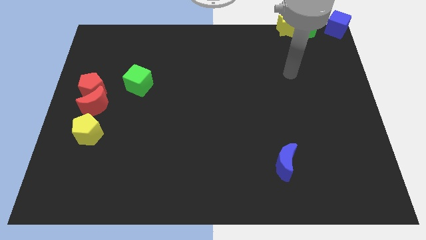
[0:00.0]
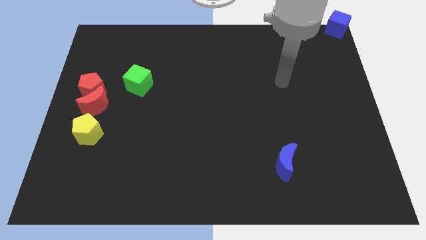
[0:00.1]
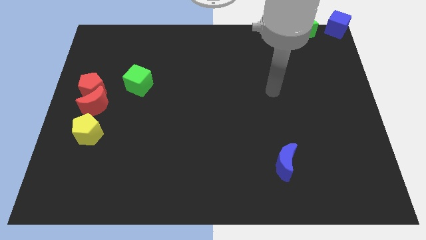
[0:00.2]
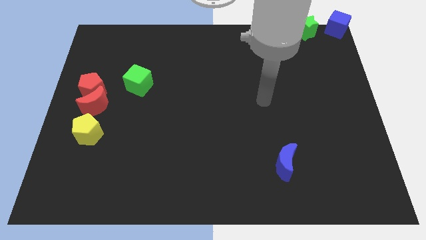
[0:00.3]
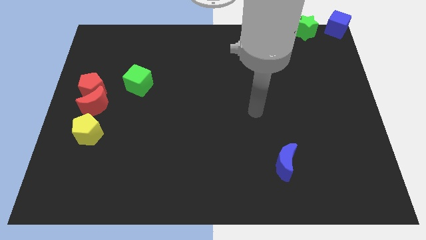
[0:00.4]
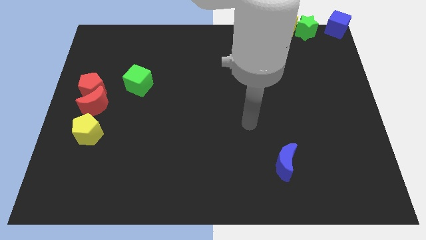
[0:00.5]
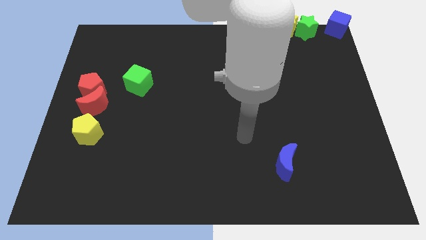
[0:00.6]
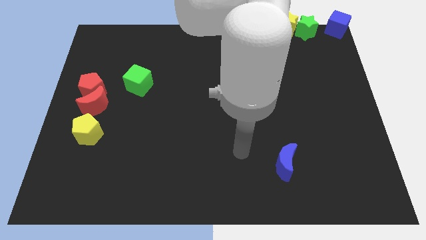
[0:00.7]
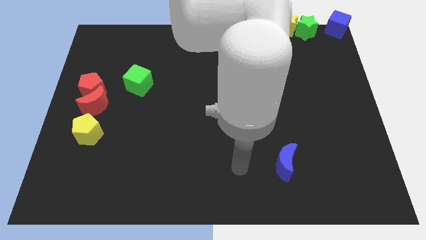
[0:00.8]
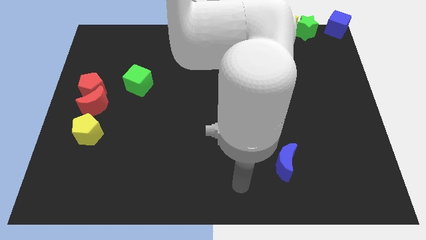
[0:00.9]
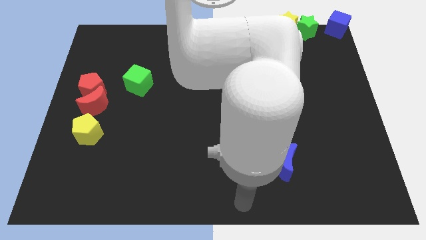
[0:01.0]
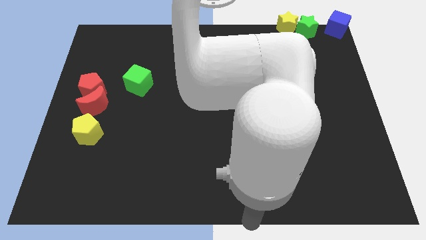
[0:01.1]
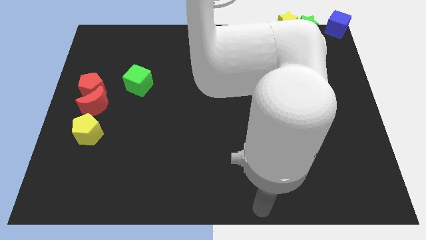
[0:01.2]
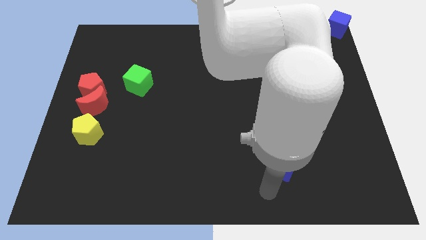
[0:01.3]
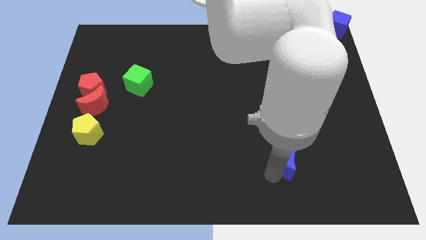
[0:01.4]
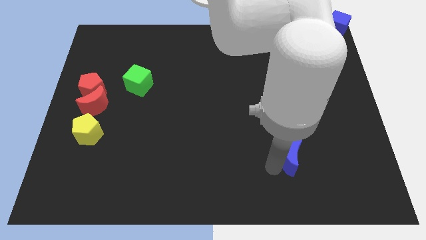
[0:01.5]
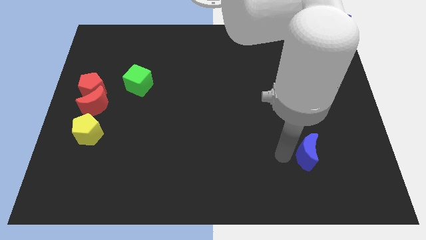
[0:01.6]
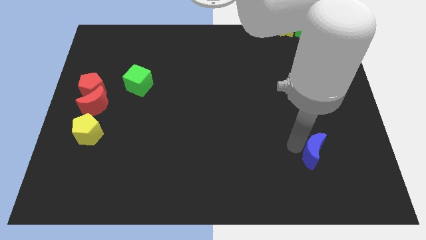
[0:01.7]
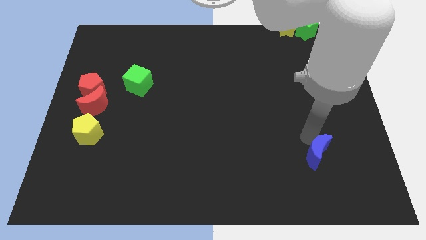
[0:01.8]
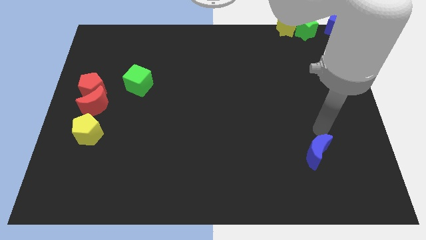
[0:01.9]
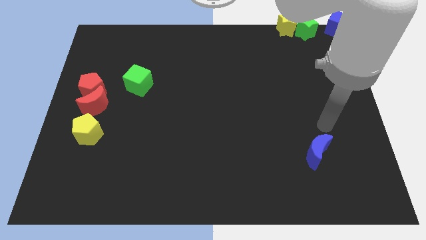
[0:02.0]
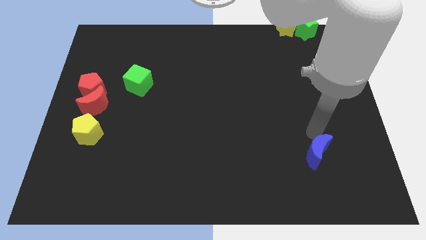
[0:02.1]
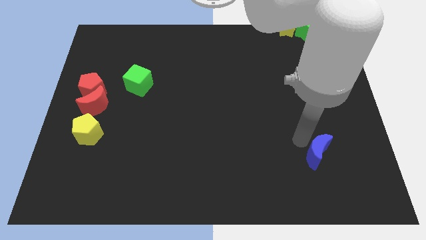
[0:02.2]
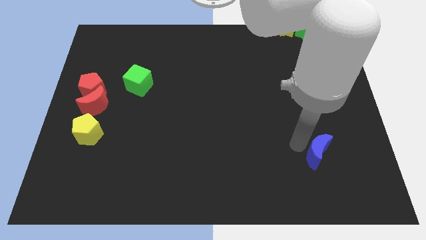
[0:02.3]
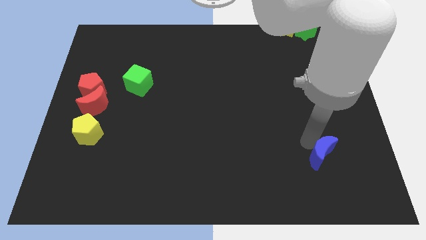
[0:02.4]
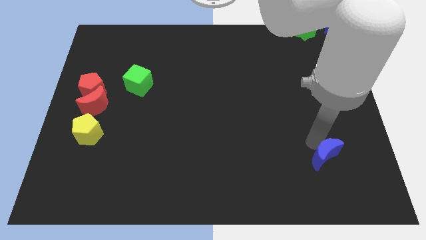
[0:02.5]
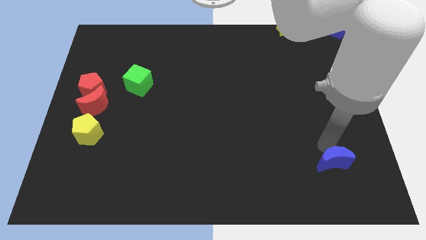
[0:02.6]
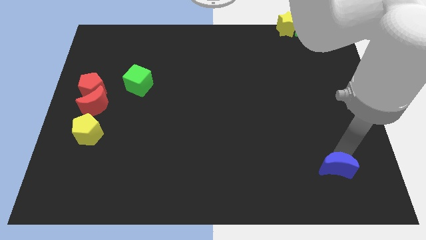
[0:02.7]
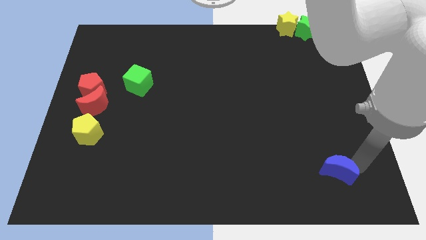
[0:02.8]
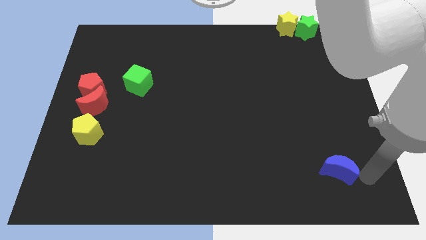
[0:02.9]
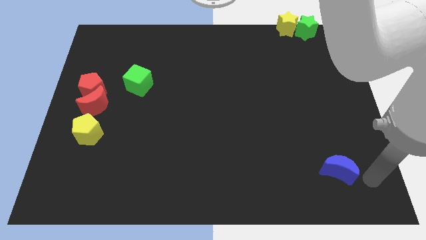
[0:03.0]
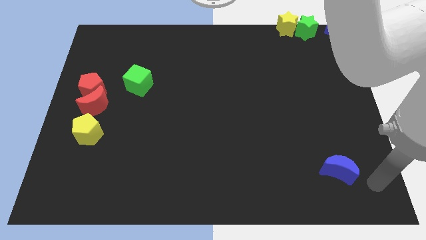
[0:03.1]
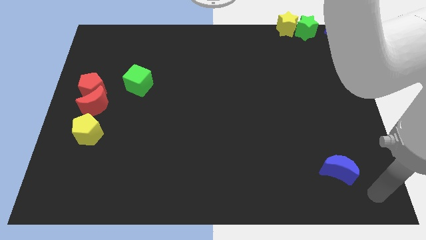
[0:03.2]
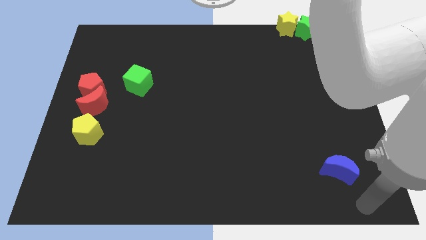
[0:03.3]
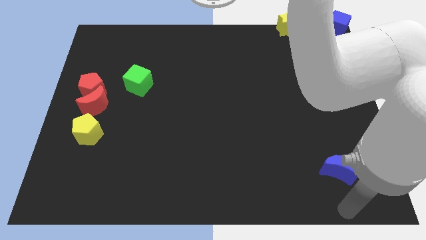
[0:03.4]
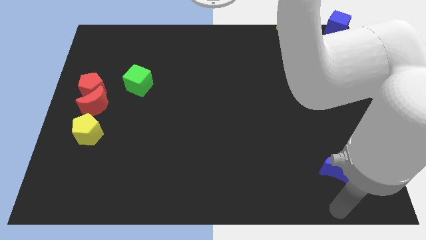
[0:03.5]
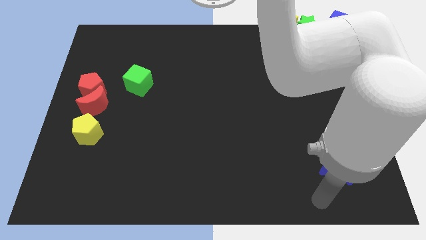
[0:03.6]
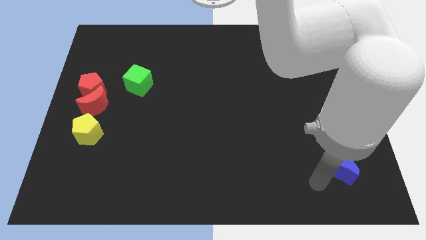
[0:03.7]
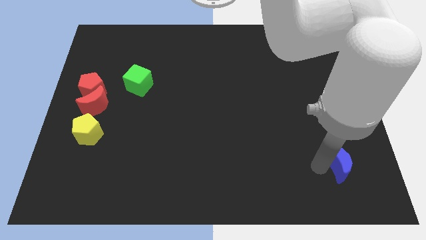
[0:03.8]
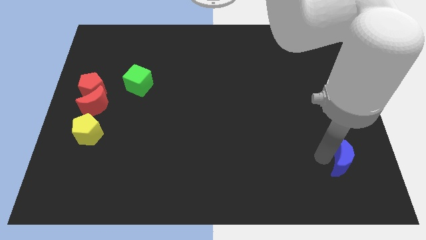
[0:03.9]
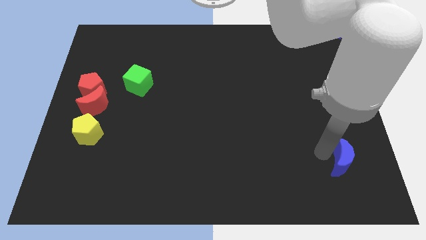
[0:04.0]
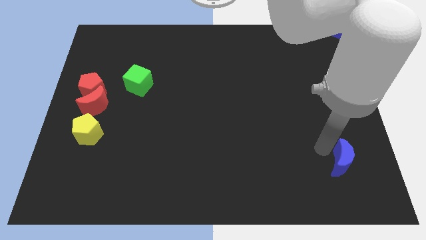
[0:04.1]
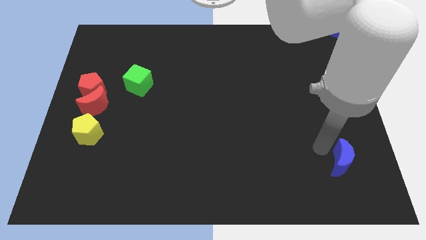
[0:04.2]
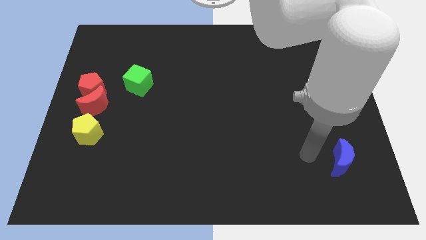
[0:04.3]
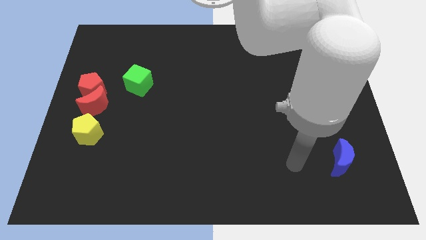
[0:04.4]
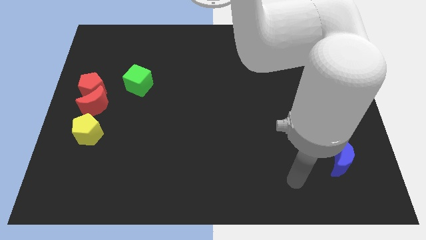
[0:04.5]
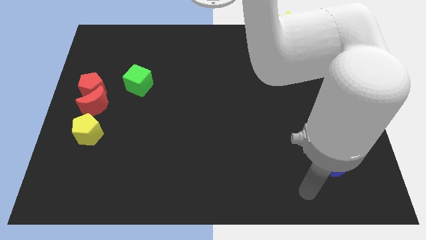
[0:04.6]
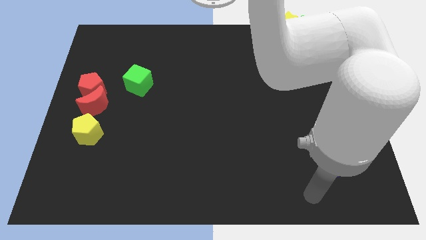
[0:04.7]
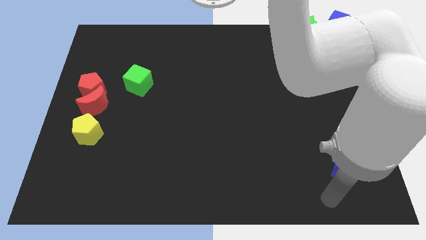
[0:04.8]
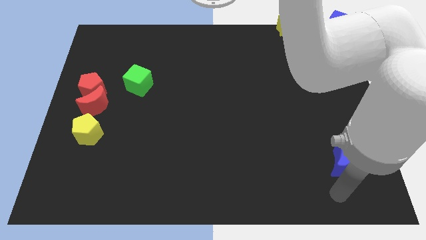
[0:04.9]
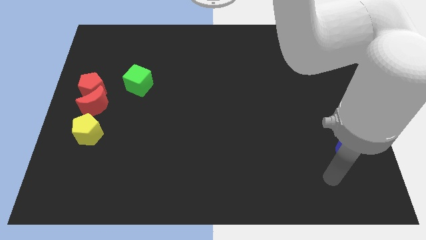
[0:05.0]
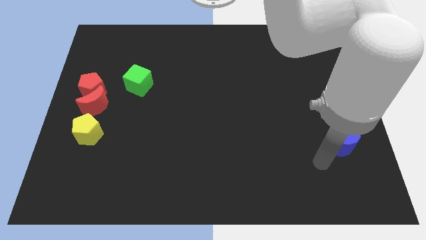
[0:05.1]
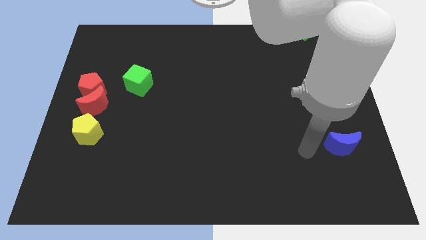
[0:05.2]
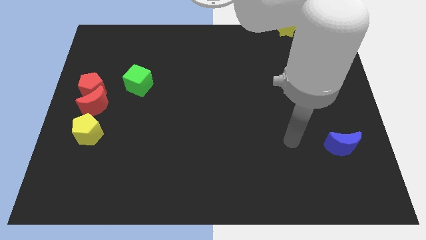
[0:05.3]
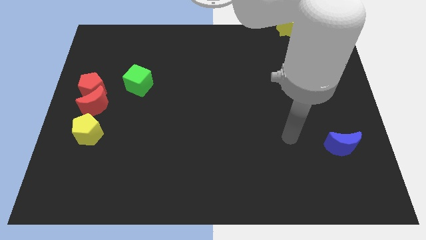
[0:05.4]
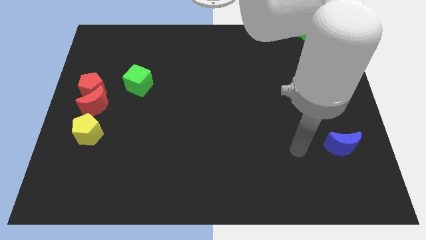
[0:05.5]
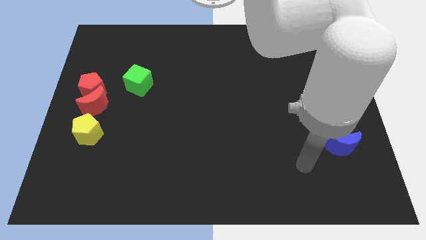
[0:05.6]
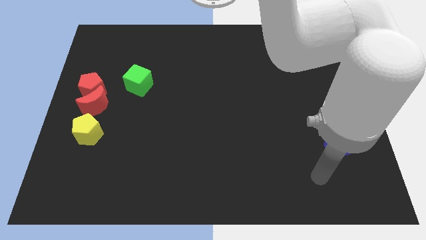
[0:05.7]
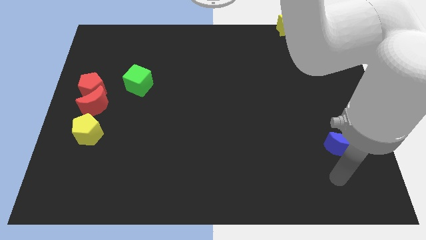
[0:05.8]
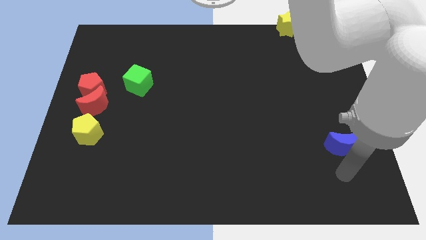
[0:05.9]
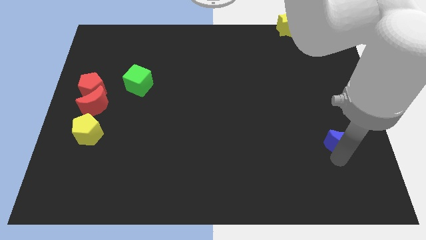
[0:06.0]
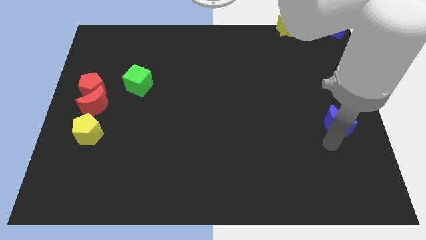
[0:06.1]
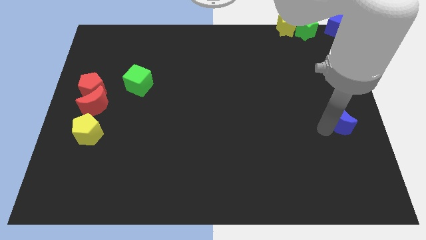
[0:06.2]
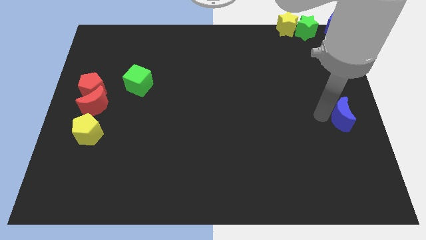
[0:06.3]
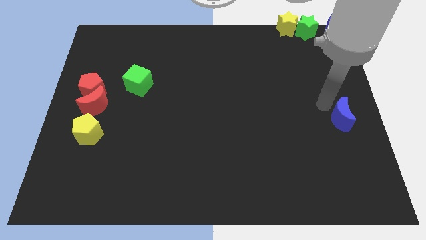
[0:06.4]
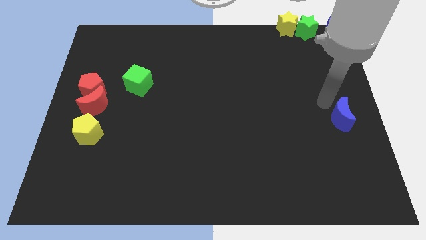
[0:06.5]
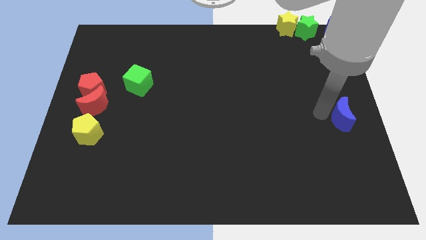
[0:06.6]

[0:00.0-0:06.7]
place the blue crescent parallel to the right center of the board

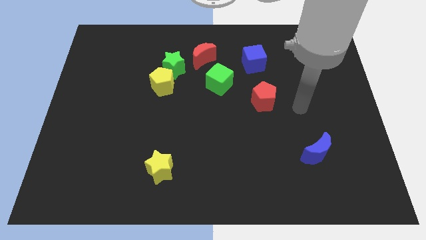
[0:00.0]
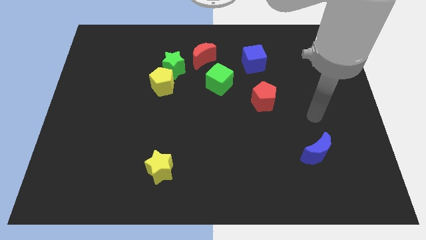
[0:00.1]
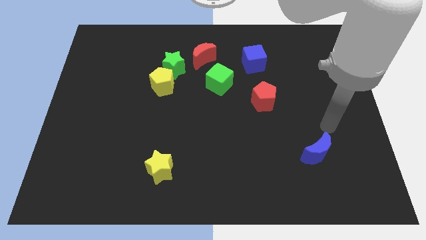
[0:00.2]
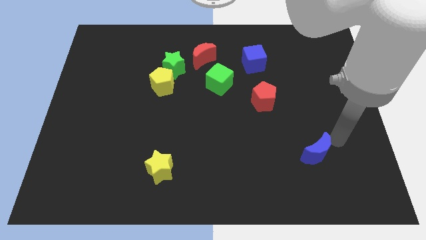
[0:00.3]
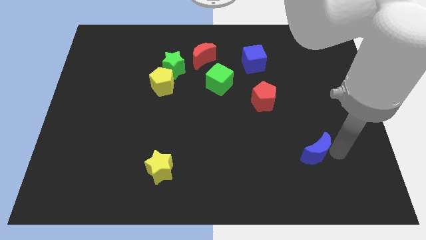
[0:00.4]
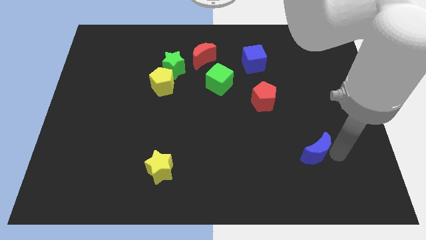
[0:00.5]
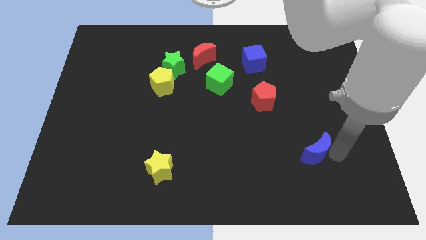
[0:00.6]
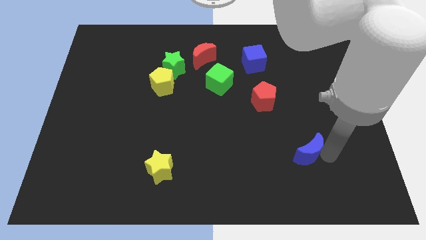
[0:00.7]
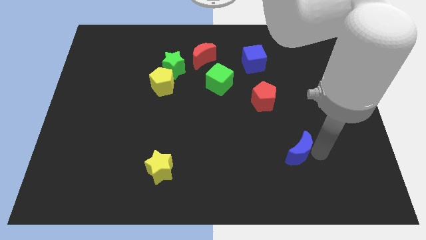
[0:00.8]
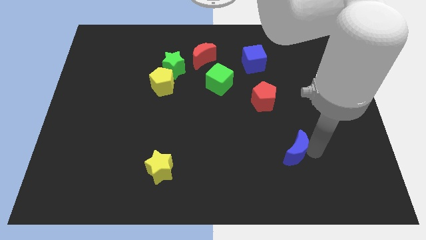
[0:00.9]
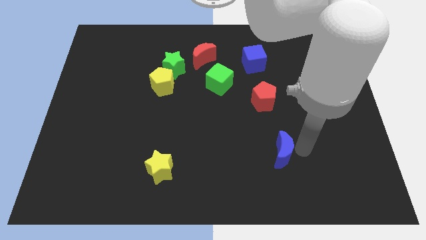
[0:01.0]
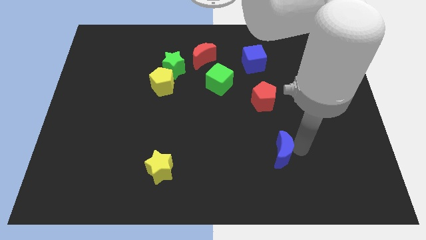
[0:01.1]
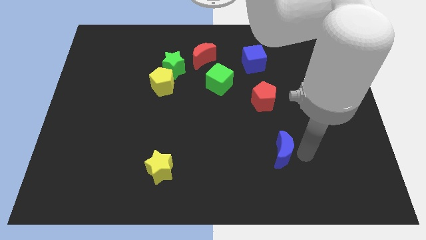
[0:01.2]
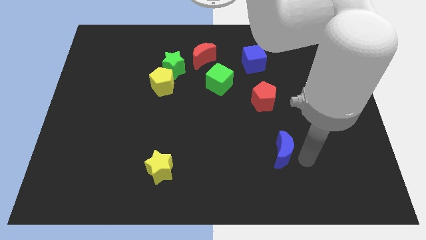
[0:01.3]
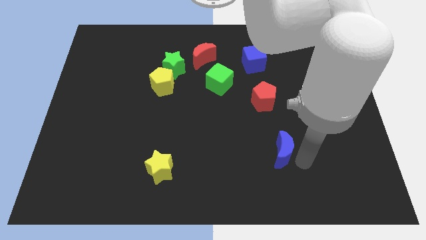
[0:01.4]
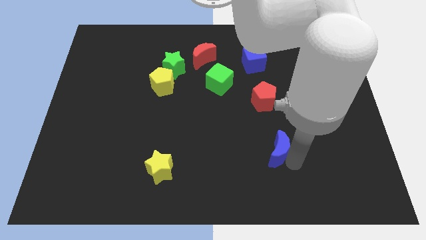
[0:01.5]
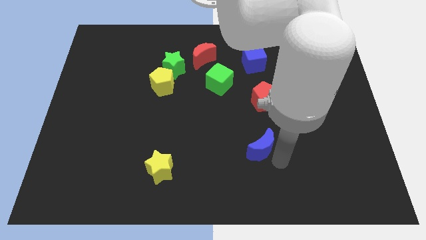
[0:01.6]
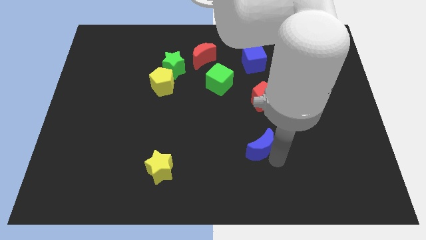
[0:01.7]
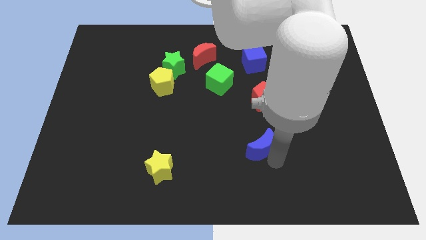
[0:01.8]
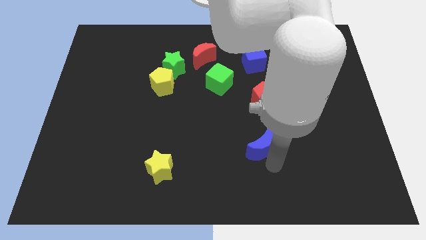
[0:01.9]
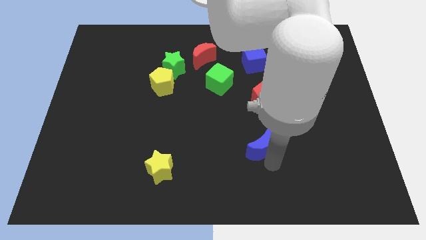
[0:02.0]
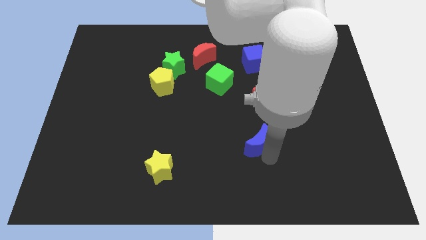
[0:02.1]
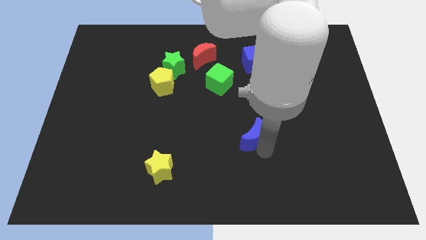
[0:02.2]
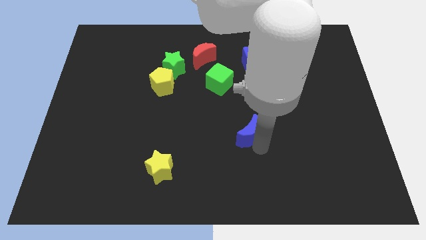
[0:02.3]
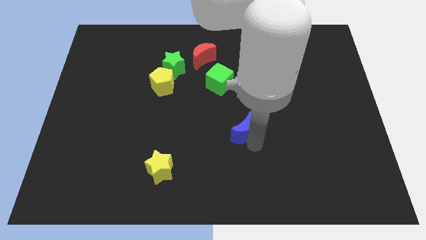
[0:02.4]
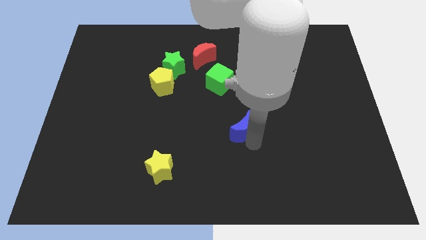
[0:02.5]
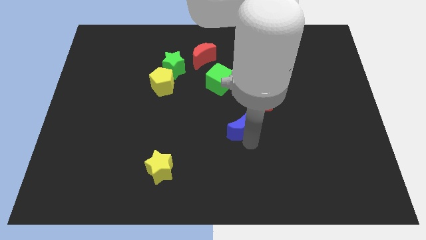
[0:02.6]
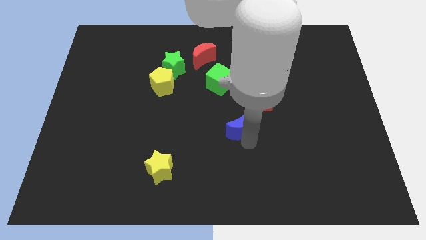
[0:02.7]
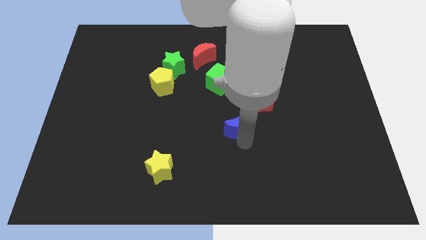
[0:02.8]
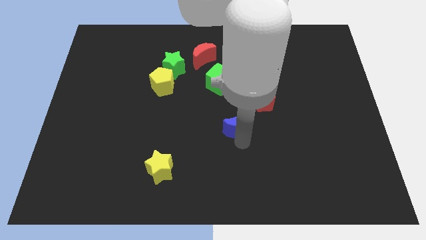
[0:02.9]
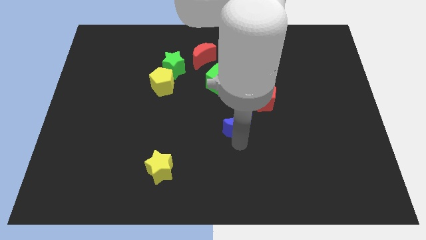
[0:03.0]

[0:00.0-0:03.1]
move the blue moon near center of the board
